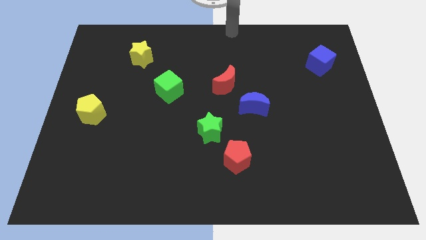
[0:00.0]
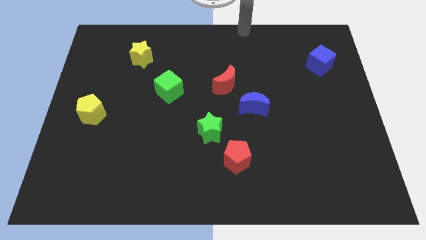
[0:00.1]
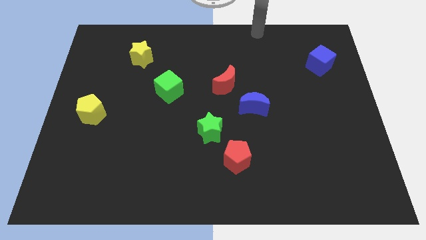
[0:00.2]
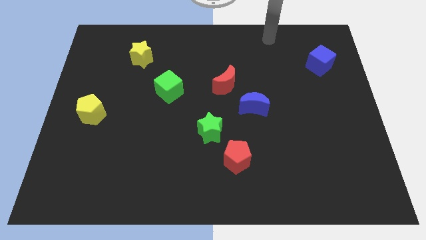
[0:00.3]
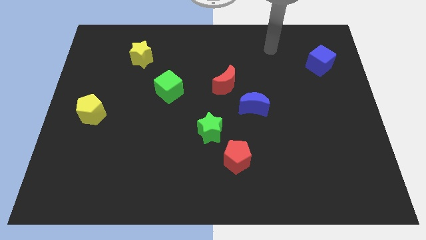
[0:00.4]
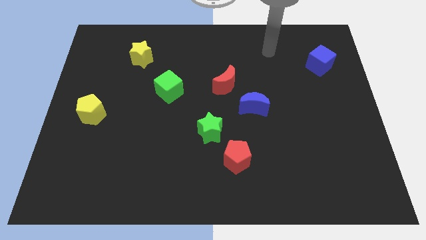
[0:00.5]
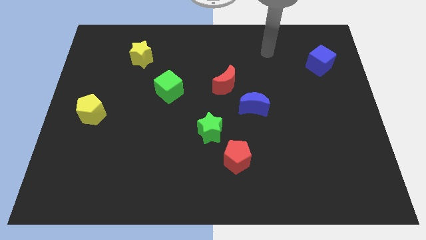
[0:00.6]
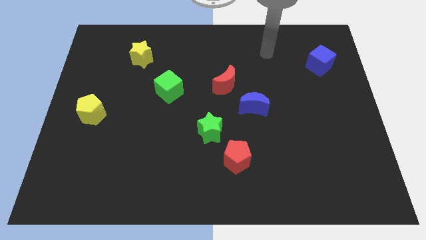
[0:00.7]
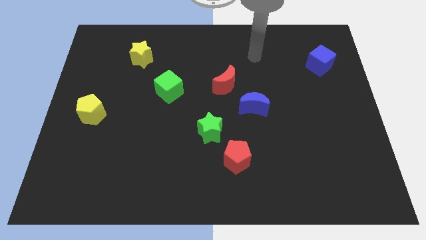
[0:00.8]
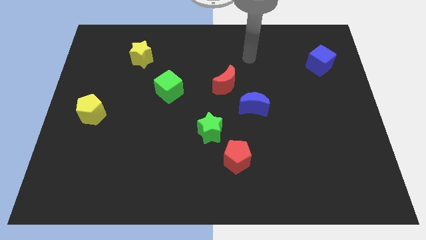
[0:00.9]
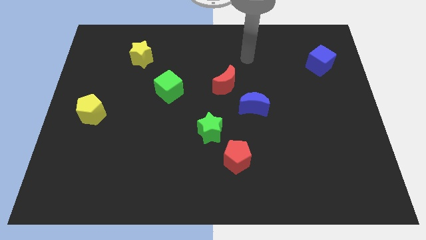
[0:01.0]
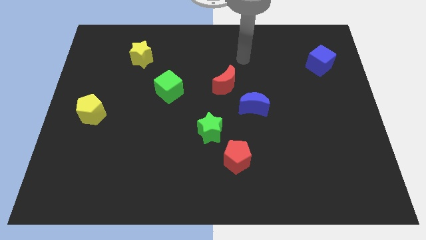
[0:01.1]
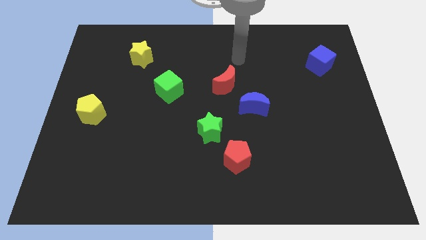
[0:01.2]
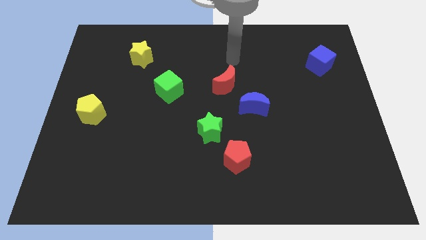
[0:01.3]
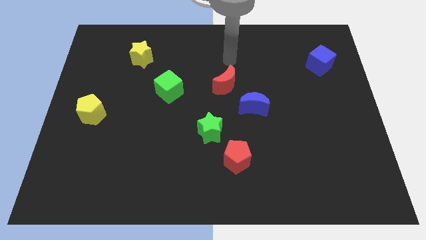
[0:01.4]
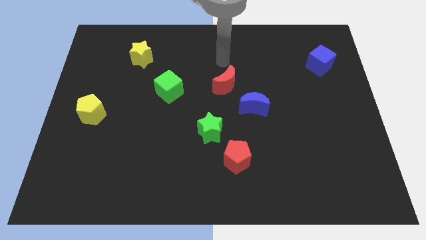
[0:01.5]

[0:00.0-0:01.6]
place your arm to the top of red moon

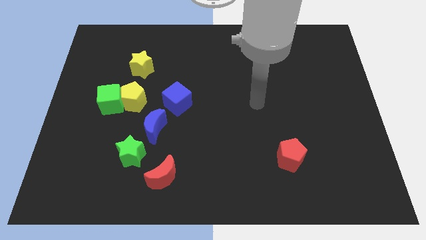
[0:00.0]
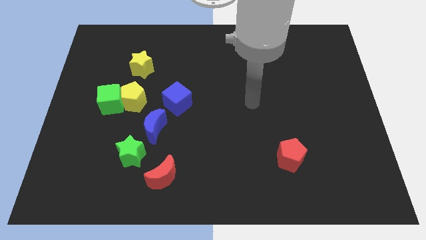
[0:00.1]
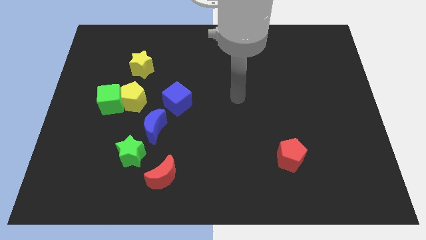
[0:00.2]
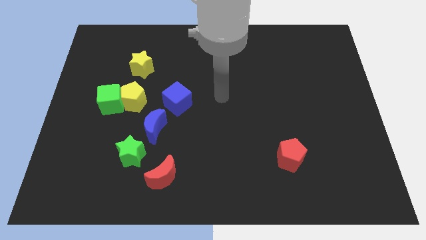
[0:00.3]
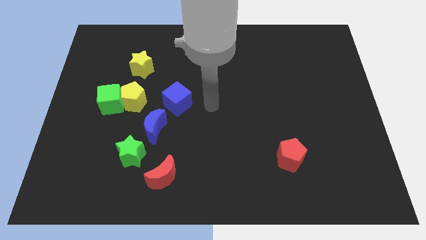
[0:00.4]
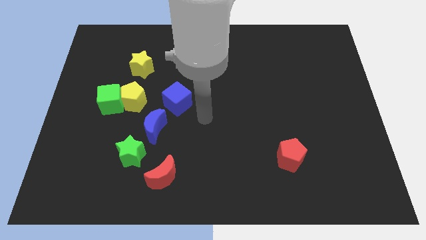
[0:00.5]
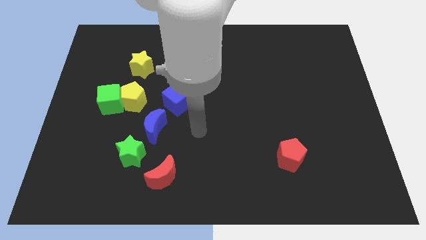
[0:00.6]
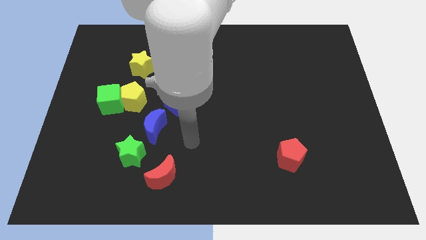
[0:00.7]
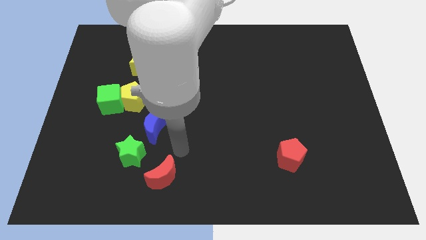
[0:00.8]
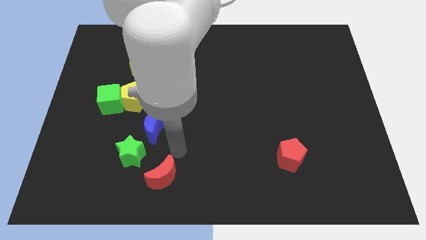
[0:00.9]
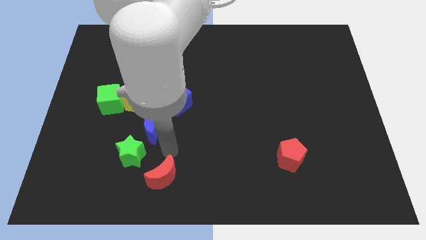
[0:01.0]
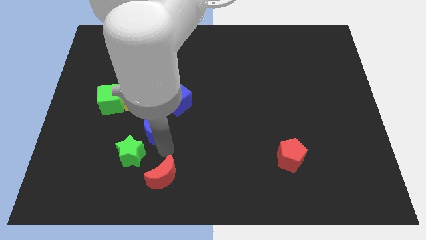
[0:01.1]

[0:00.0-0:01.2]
place the pointer at the top of red moon

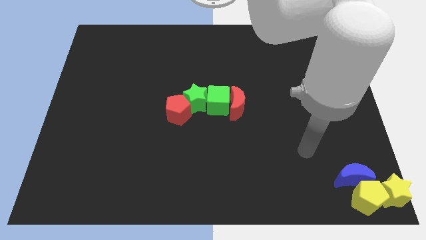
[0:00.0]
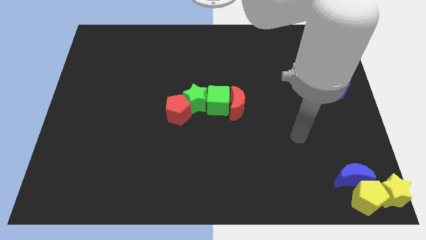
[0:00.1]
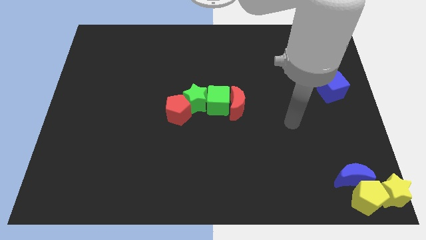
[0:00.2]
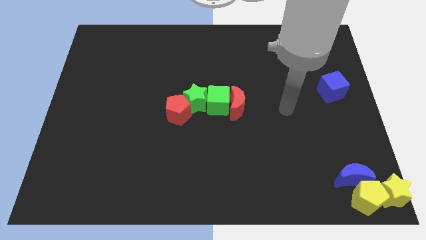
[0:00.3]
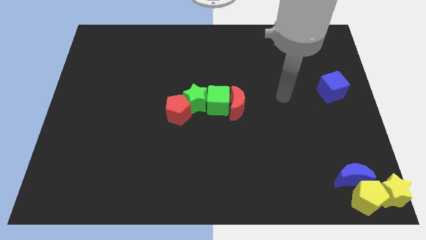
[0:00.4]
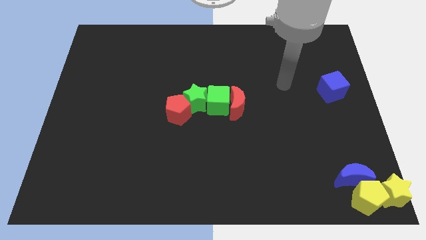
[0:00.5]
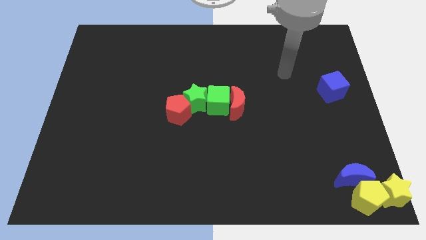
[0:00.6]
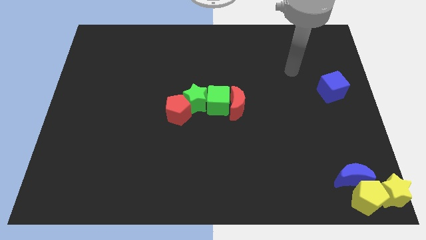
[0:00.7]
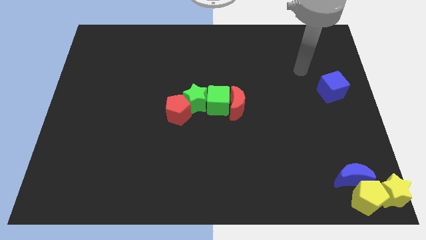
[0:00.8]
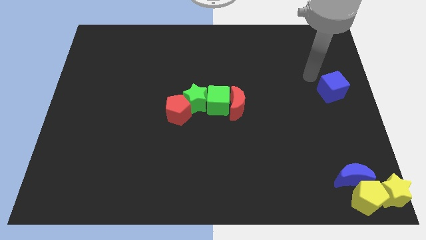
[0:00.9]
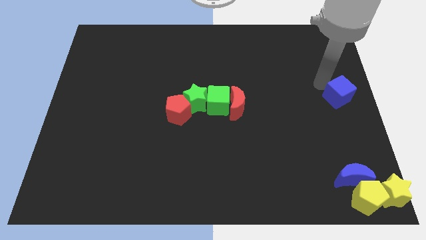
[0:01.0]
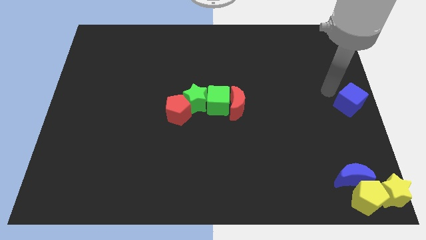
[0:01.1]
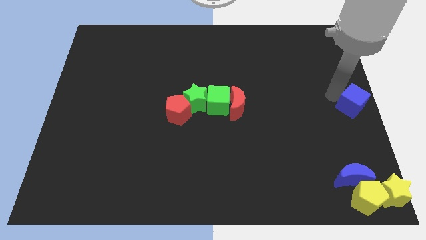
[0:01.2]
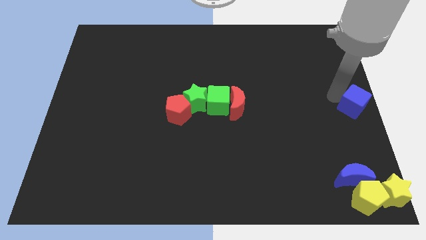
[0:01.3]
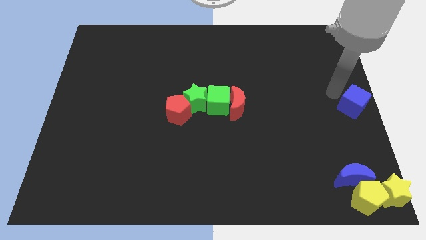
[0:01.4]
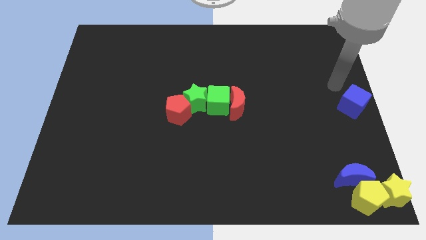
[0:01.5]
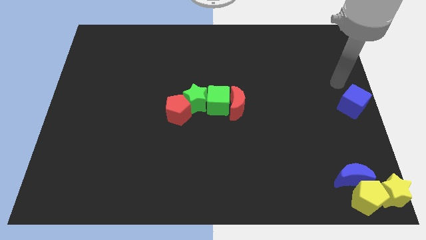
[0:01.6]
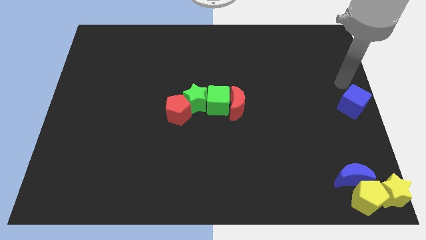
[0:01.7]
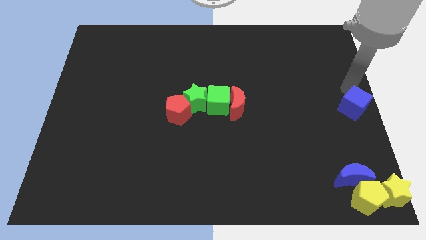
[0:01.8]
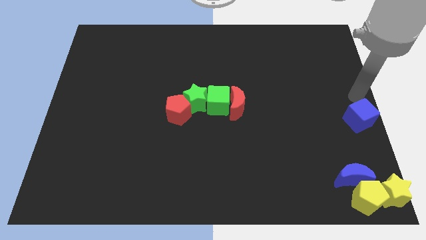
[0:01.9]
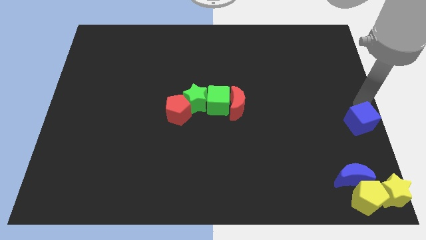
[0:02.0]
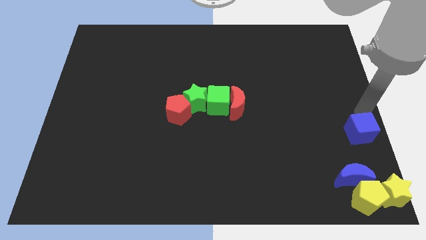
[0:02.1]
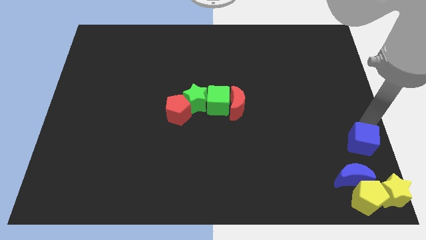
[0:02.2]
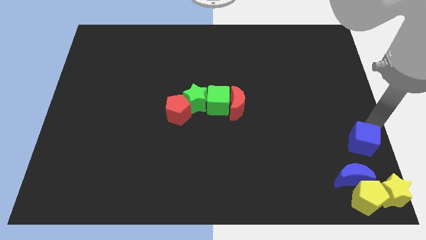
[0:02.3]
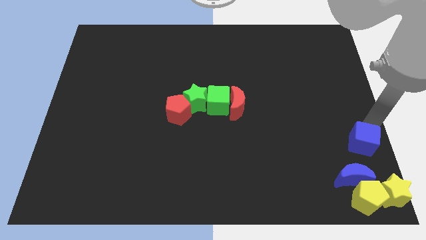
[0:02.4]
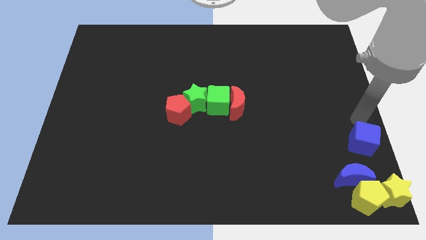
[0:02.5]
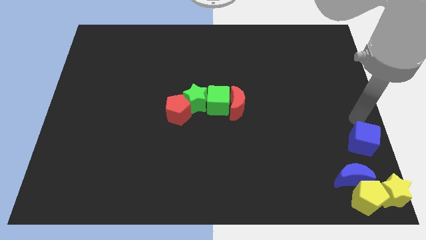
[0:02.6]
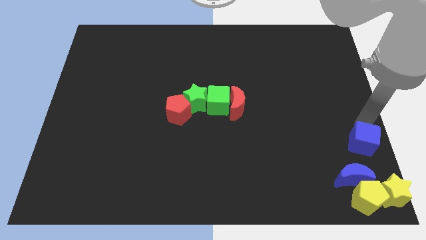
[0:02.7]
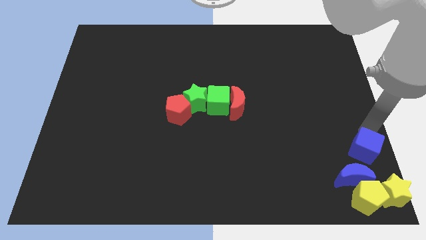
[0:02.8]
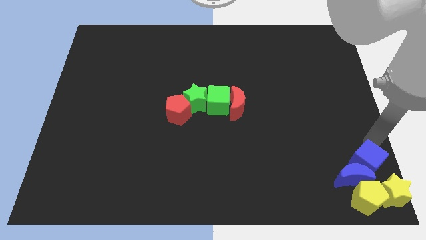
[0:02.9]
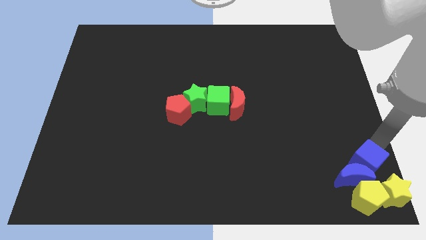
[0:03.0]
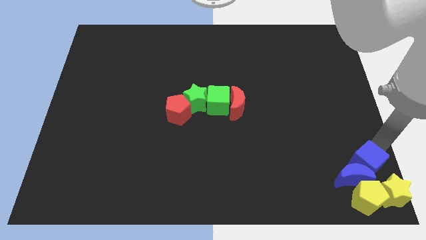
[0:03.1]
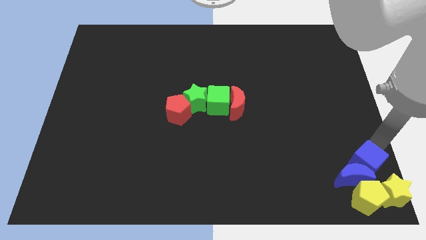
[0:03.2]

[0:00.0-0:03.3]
move the blue cube to above the blue crescent

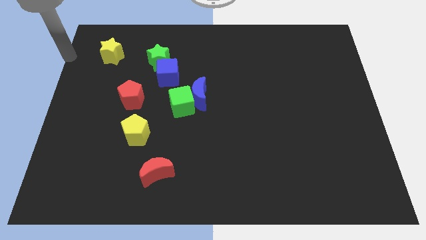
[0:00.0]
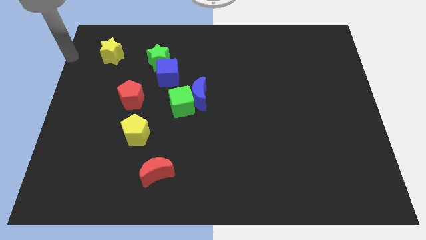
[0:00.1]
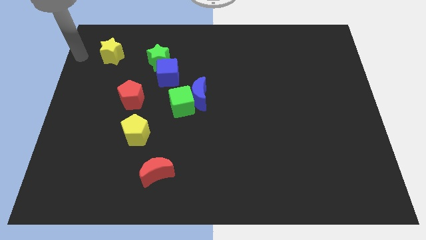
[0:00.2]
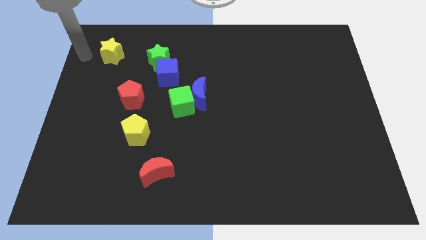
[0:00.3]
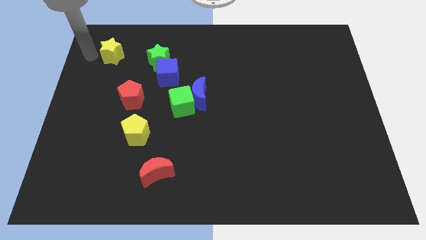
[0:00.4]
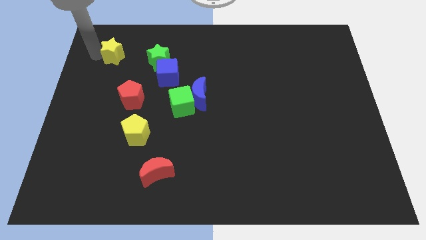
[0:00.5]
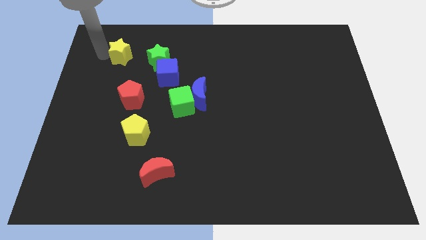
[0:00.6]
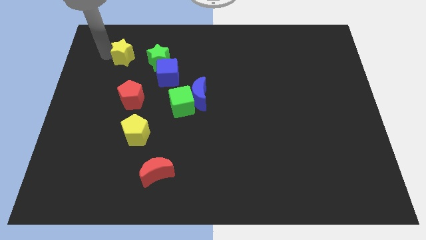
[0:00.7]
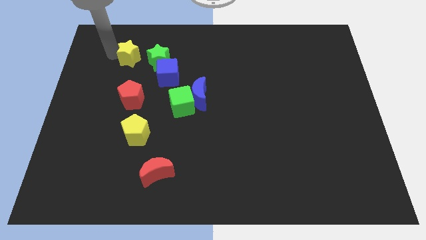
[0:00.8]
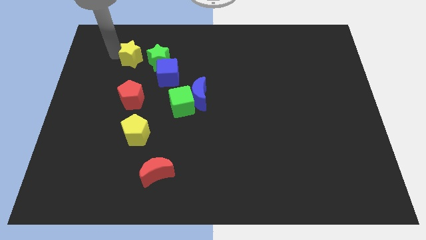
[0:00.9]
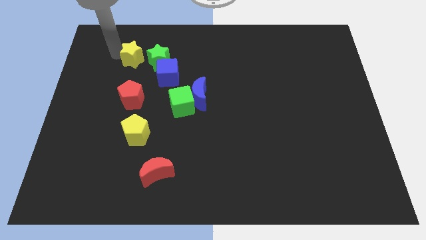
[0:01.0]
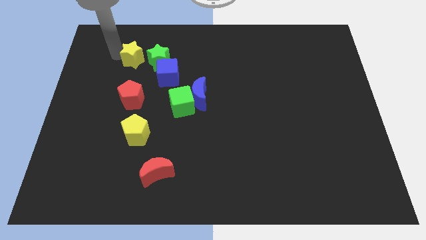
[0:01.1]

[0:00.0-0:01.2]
put the yellow star close to the green star

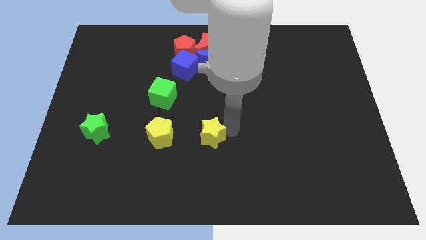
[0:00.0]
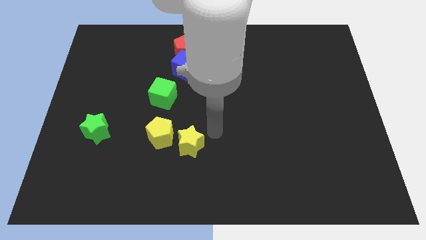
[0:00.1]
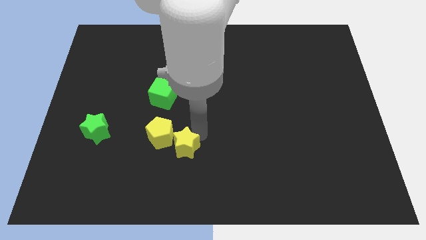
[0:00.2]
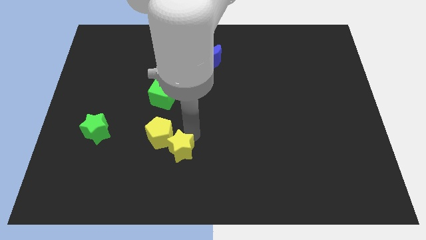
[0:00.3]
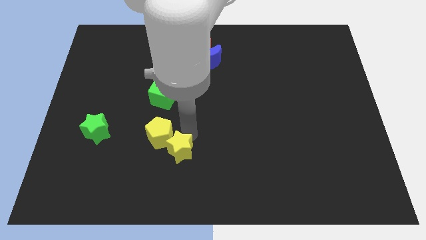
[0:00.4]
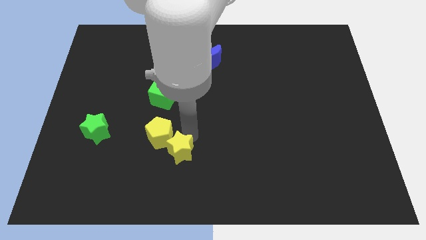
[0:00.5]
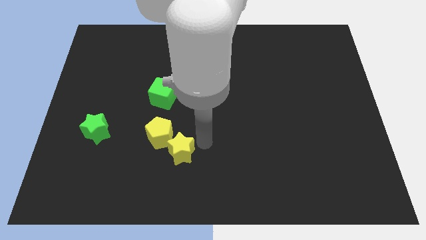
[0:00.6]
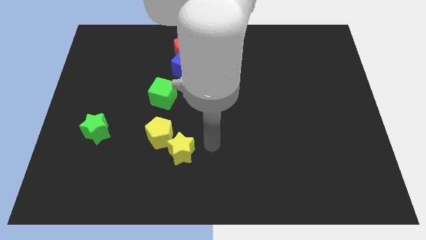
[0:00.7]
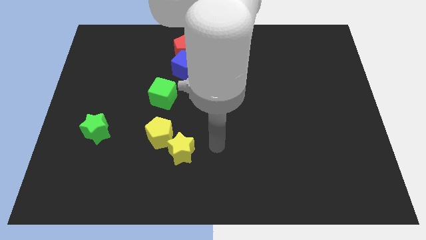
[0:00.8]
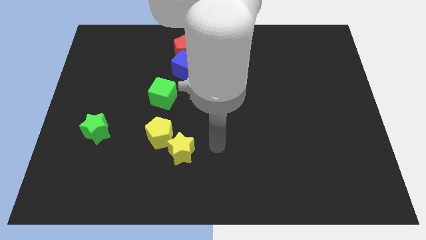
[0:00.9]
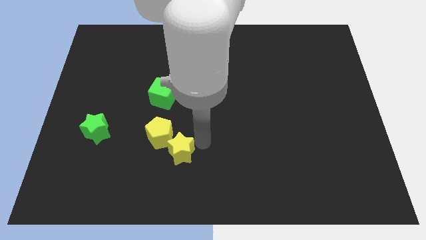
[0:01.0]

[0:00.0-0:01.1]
push the yellow star at the bottom right of the yellow pentagon

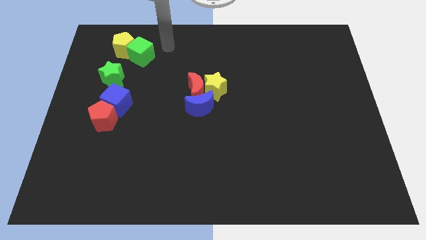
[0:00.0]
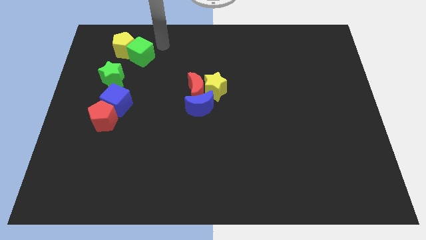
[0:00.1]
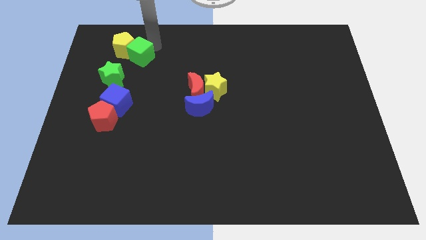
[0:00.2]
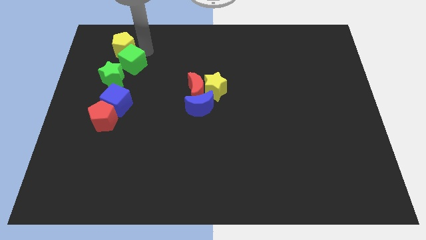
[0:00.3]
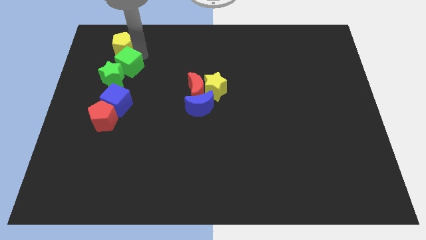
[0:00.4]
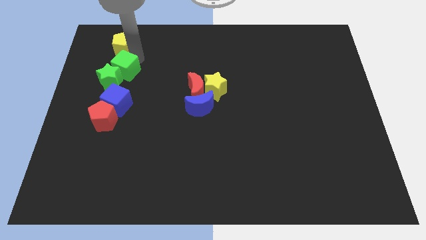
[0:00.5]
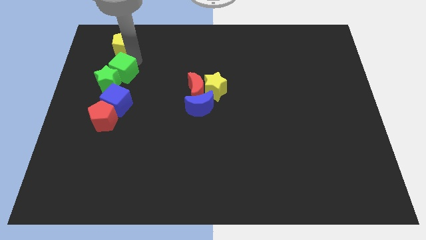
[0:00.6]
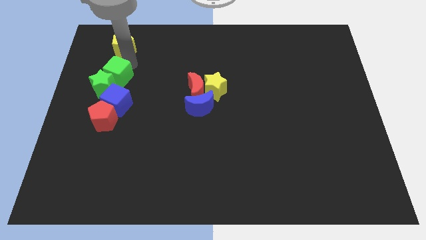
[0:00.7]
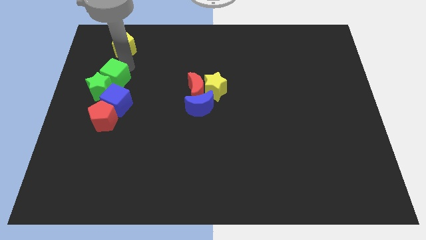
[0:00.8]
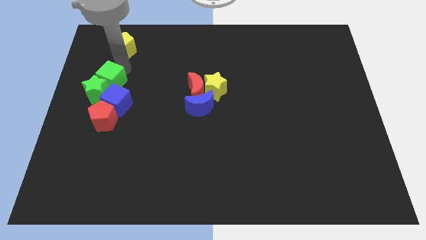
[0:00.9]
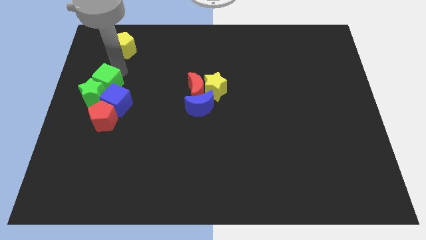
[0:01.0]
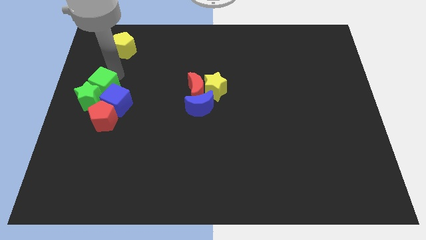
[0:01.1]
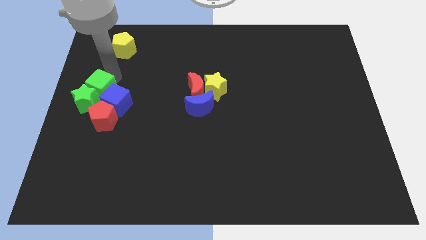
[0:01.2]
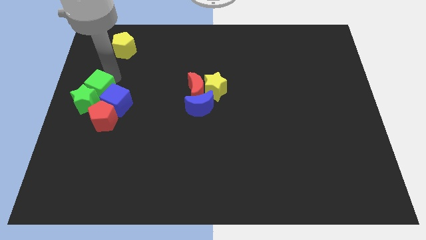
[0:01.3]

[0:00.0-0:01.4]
move the green cube into the green star
